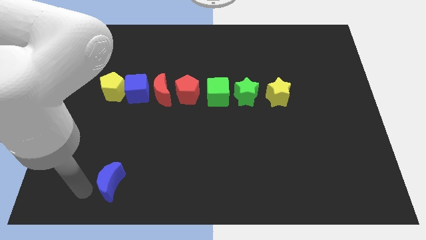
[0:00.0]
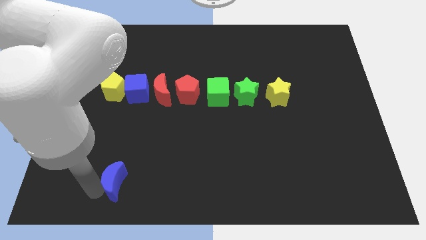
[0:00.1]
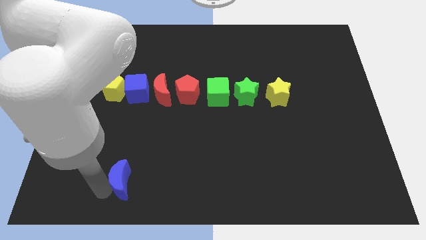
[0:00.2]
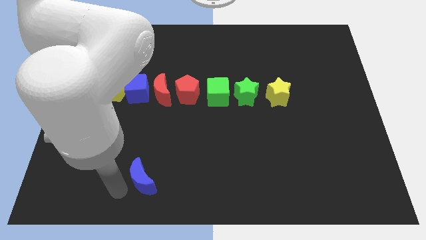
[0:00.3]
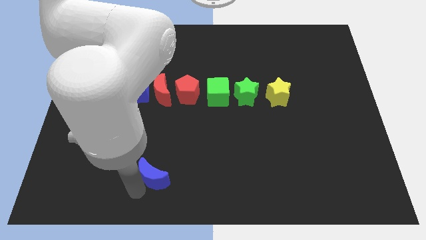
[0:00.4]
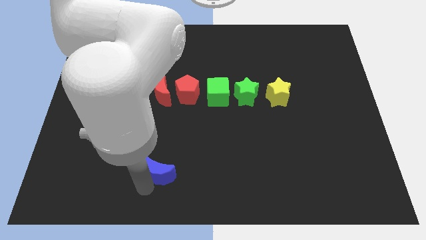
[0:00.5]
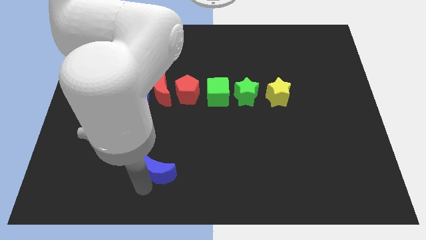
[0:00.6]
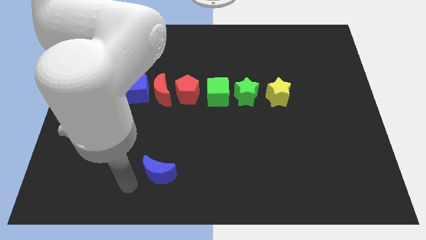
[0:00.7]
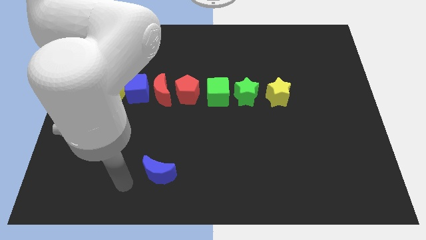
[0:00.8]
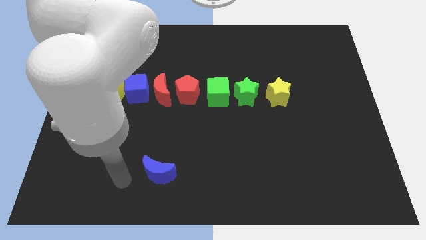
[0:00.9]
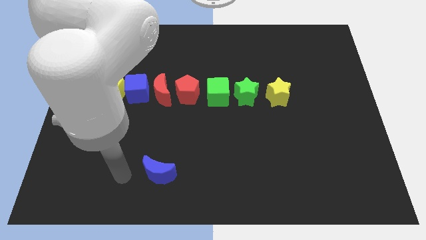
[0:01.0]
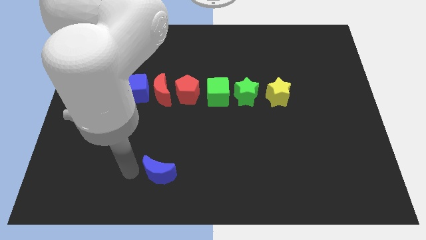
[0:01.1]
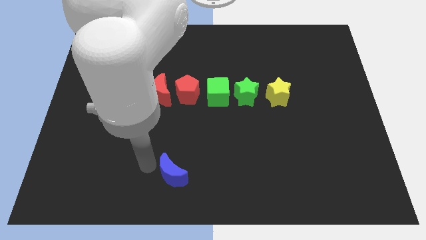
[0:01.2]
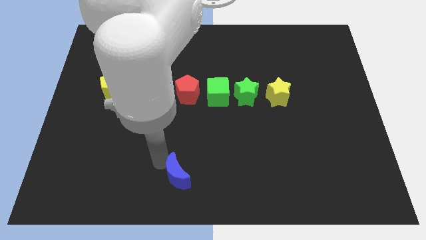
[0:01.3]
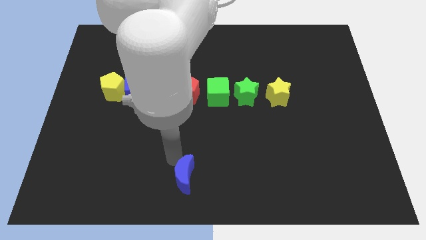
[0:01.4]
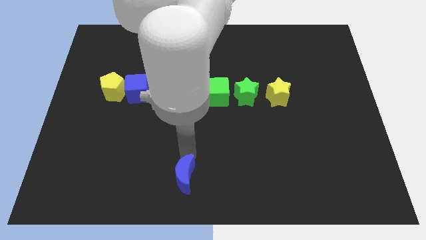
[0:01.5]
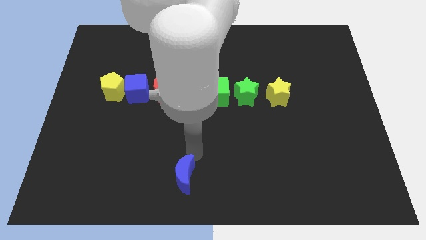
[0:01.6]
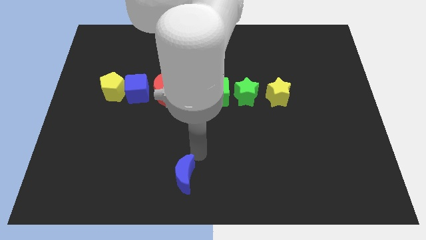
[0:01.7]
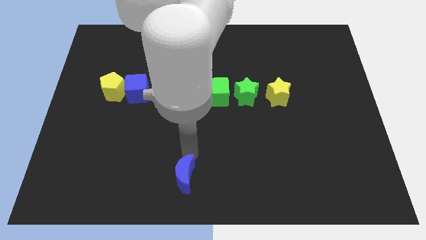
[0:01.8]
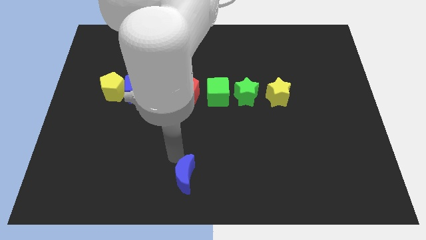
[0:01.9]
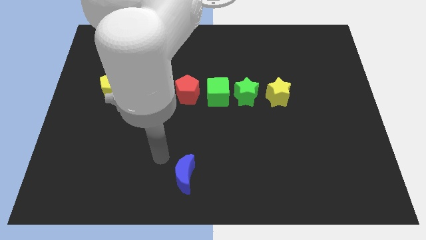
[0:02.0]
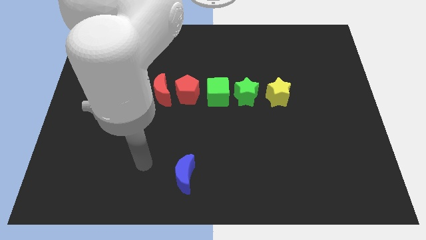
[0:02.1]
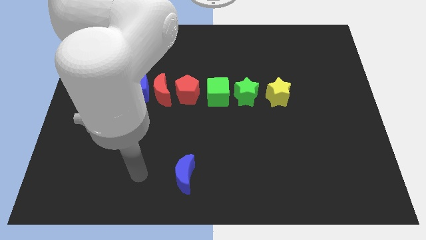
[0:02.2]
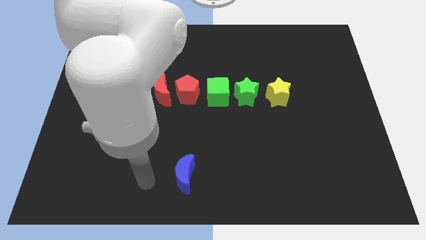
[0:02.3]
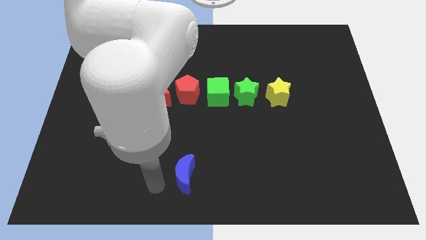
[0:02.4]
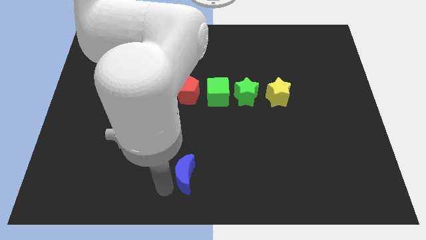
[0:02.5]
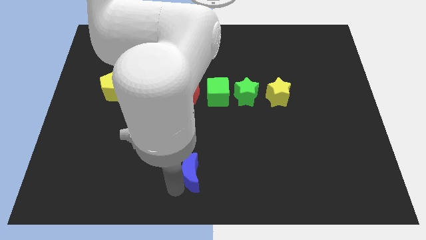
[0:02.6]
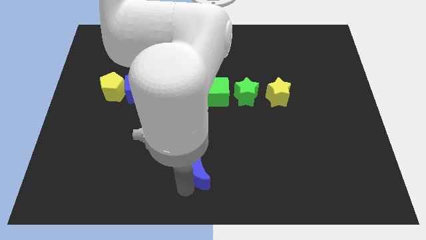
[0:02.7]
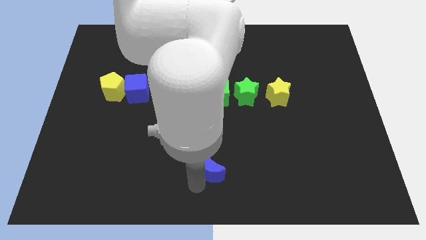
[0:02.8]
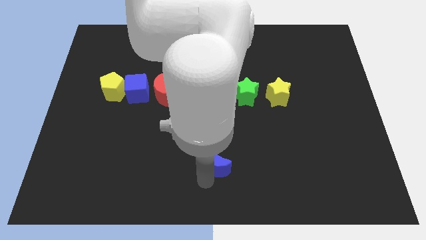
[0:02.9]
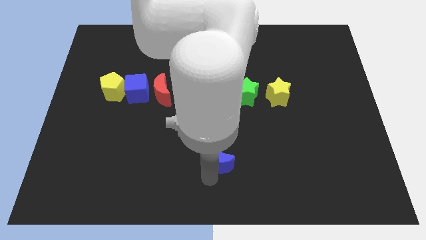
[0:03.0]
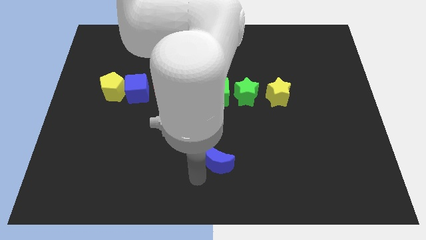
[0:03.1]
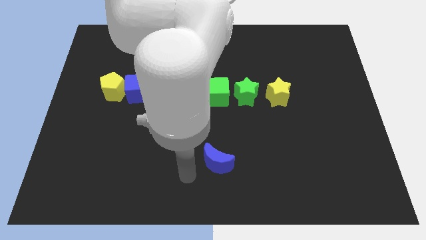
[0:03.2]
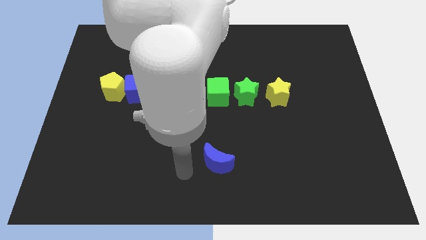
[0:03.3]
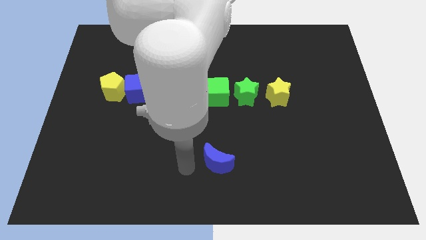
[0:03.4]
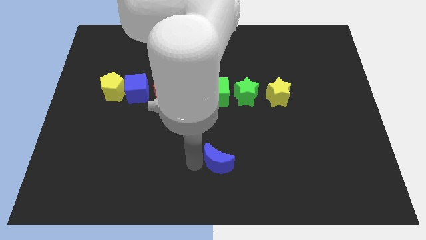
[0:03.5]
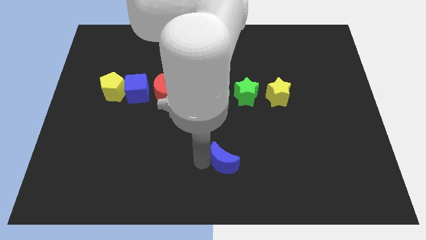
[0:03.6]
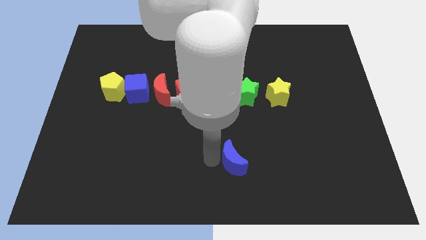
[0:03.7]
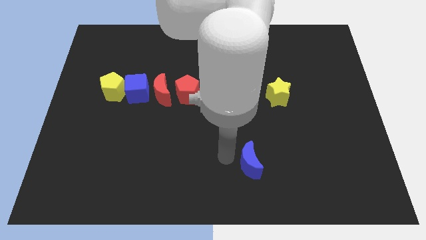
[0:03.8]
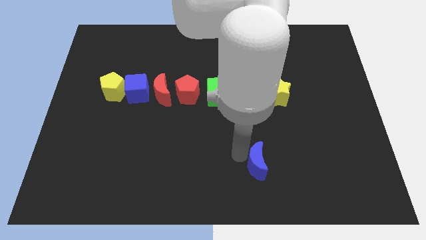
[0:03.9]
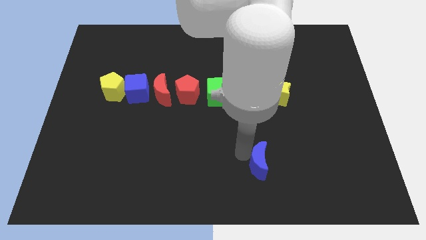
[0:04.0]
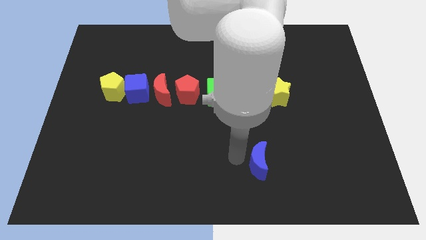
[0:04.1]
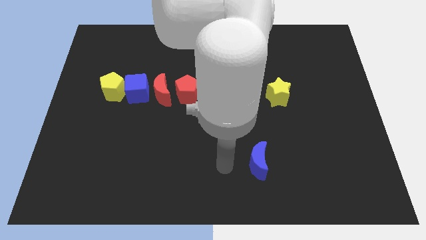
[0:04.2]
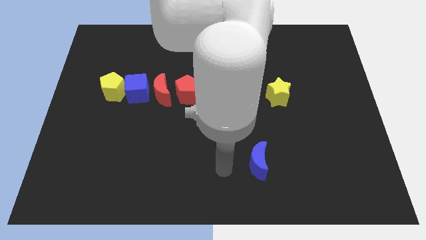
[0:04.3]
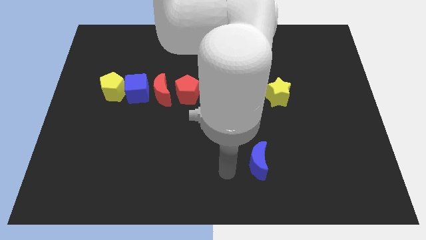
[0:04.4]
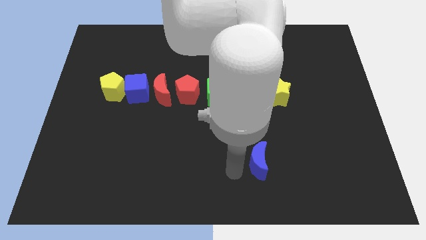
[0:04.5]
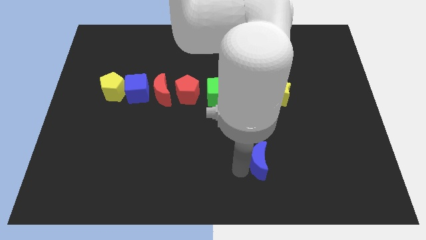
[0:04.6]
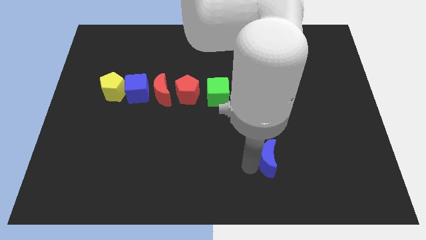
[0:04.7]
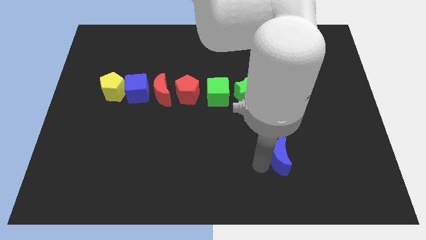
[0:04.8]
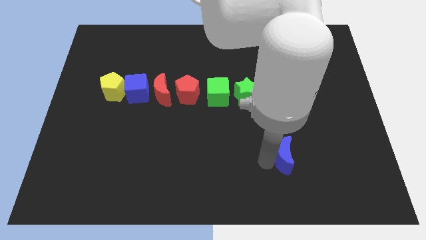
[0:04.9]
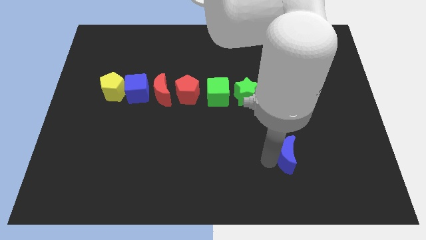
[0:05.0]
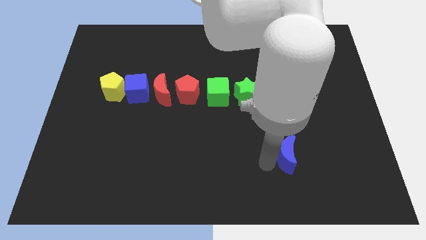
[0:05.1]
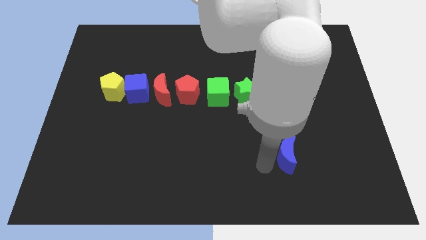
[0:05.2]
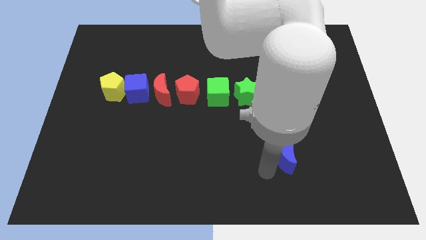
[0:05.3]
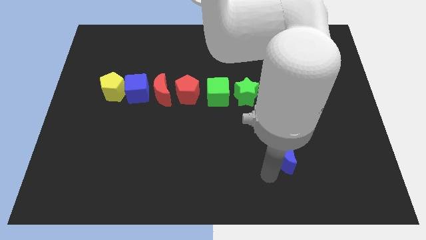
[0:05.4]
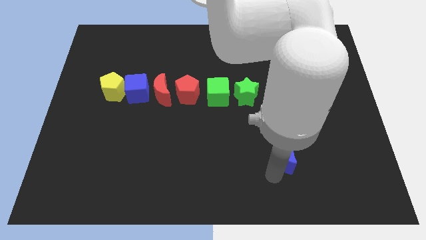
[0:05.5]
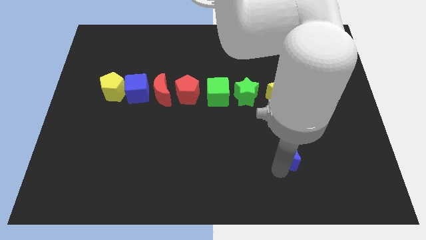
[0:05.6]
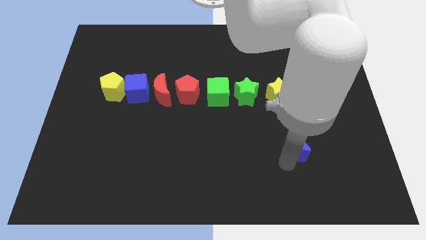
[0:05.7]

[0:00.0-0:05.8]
move blue crescent towards right side

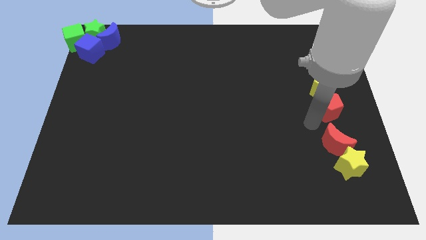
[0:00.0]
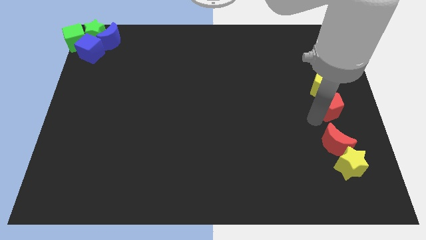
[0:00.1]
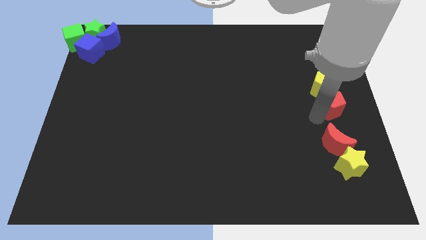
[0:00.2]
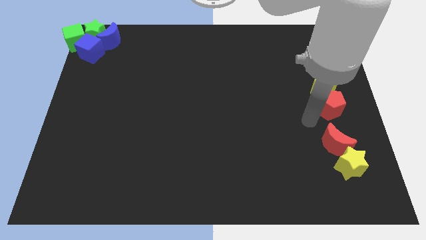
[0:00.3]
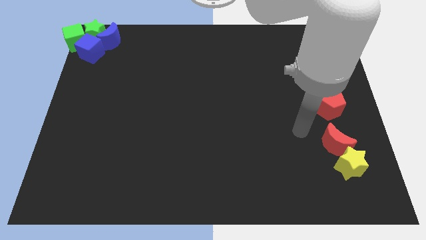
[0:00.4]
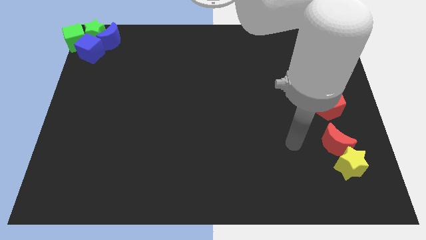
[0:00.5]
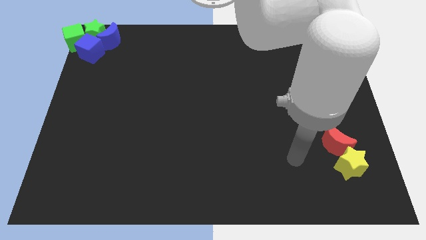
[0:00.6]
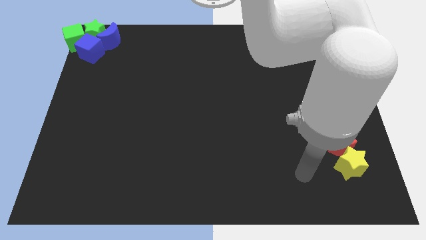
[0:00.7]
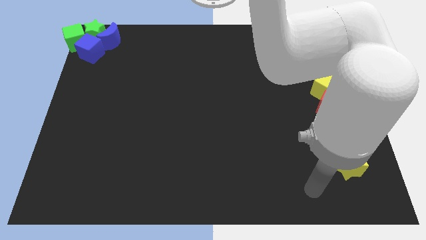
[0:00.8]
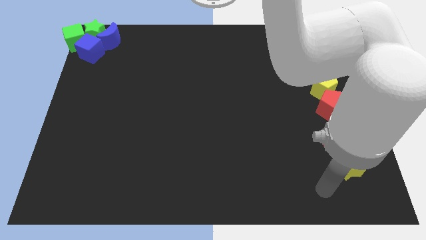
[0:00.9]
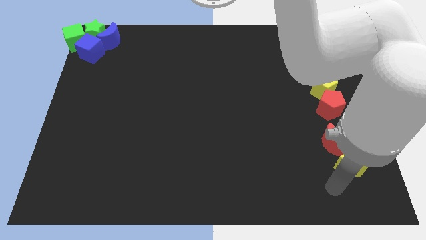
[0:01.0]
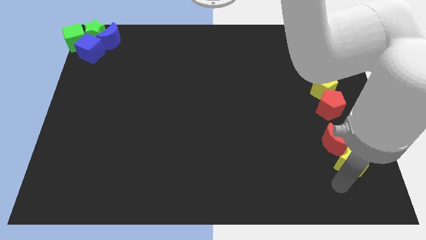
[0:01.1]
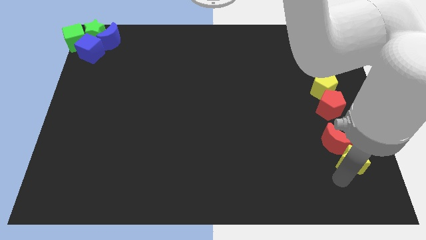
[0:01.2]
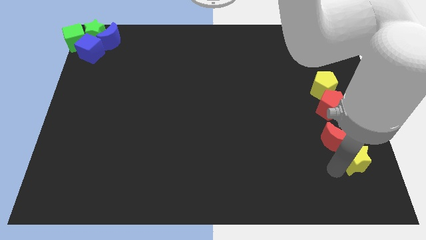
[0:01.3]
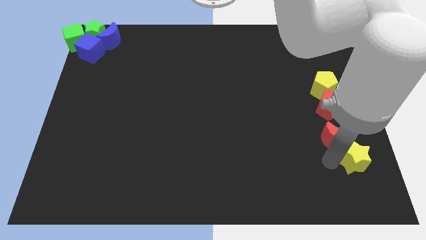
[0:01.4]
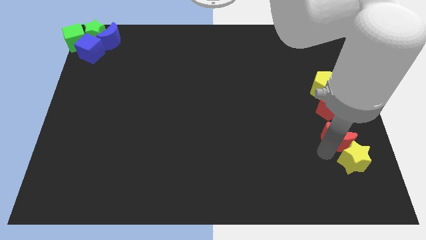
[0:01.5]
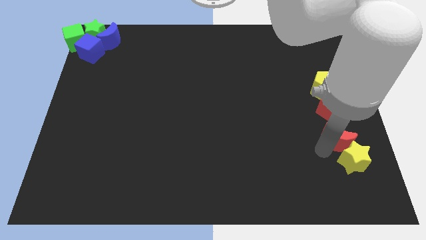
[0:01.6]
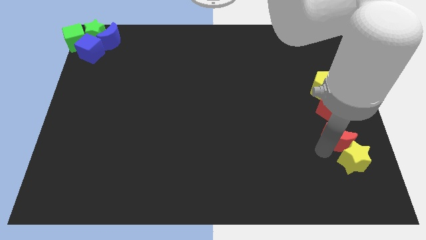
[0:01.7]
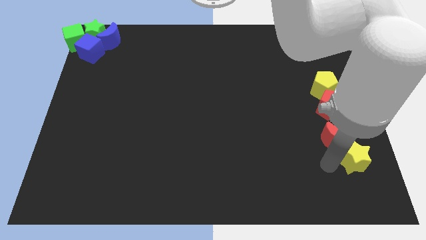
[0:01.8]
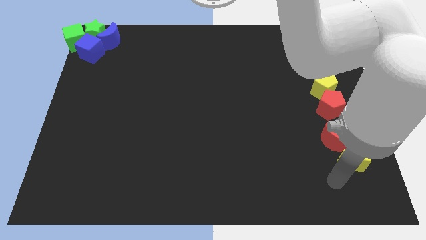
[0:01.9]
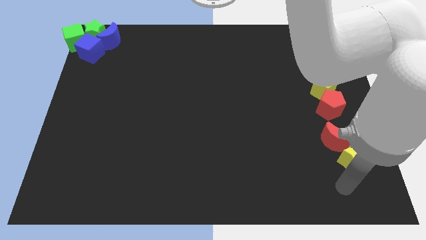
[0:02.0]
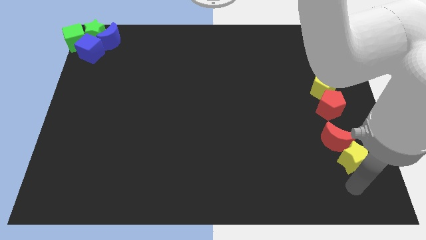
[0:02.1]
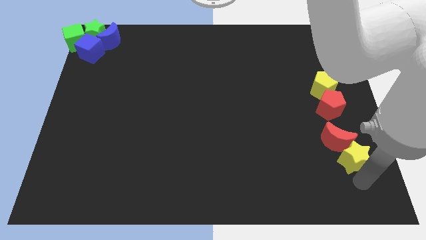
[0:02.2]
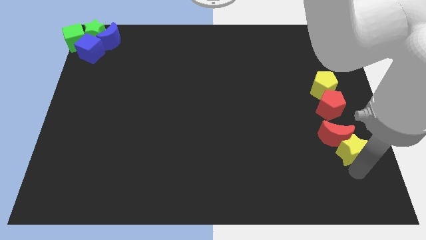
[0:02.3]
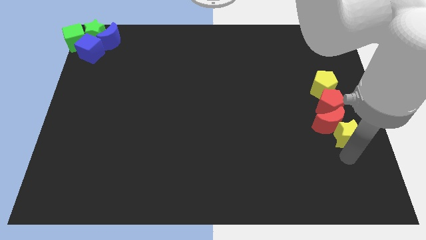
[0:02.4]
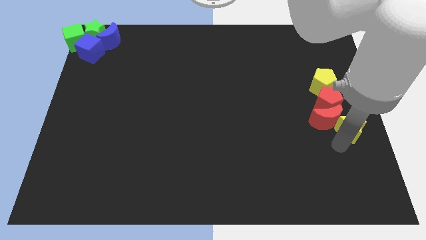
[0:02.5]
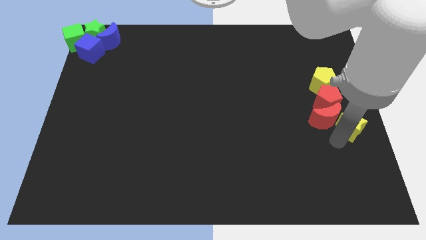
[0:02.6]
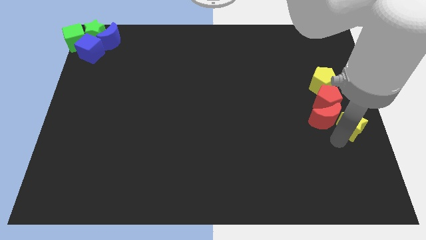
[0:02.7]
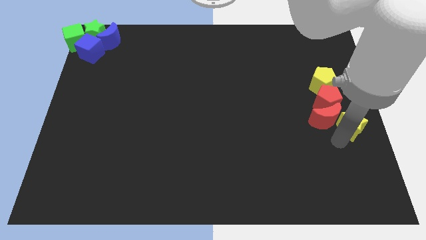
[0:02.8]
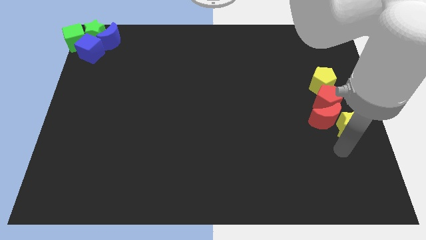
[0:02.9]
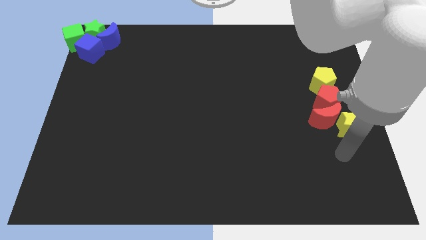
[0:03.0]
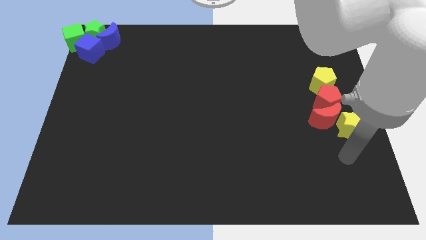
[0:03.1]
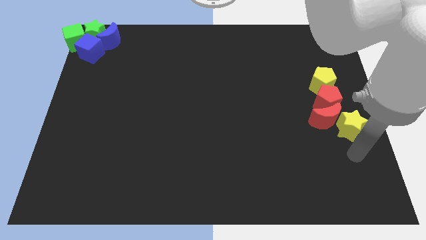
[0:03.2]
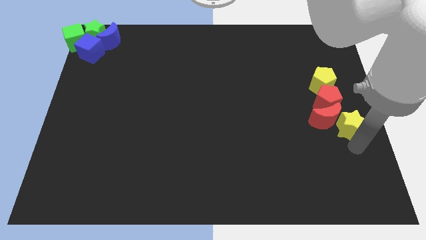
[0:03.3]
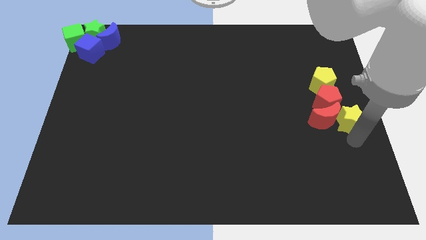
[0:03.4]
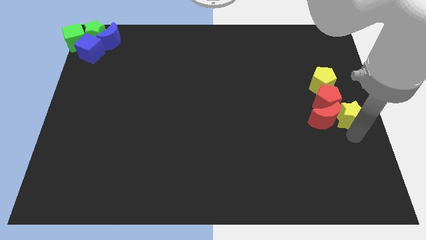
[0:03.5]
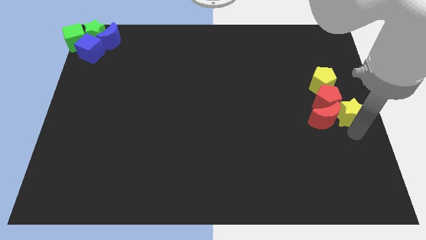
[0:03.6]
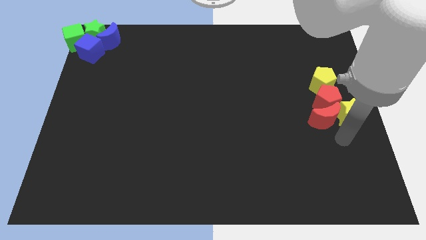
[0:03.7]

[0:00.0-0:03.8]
drag the red crescent and yellow star to the bottom side of the red pentagon
